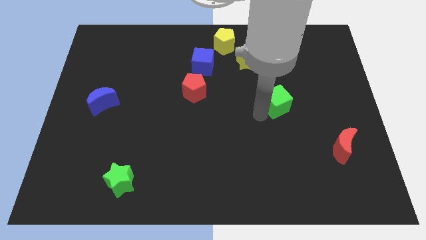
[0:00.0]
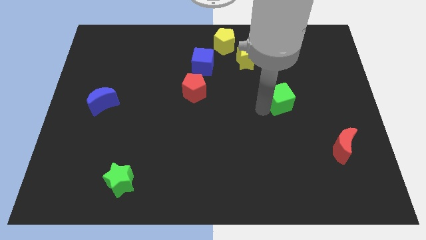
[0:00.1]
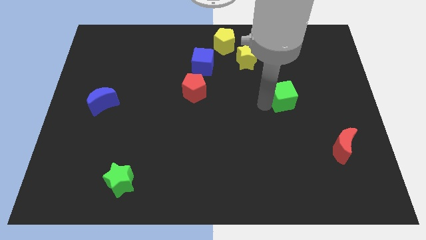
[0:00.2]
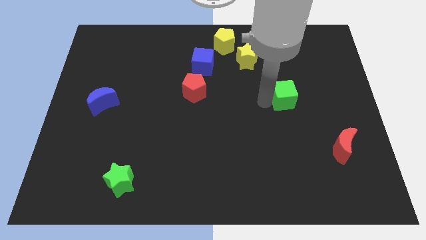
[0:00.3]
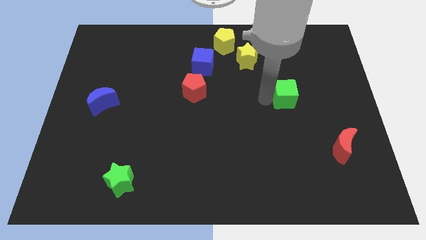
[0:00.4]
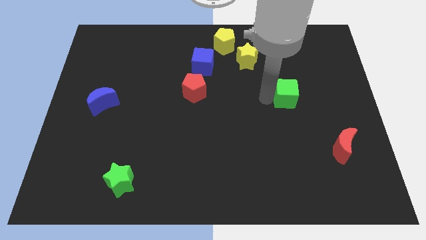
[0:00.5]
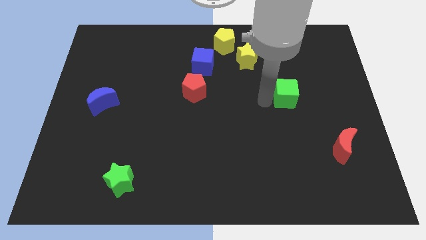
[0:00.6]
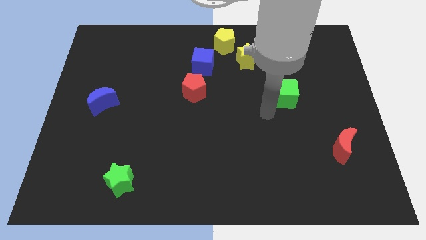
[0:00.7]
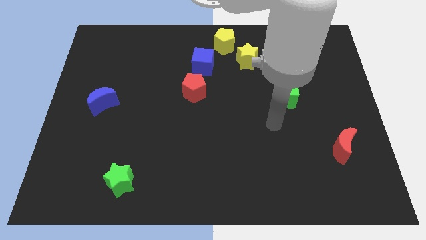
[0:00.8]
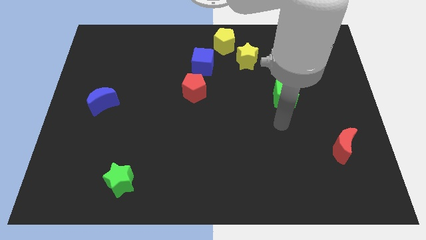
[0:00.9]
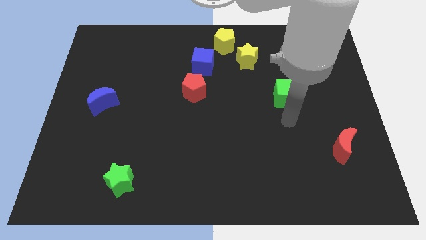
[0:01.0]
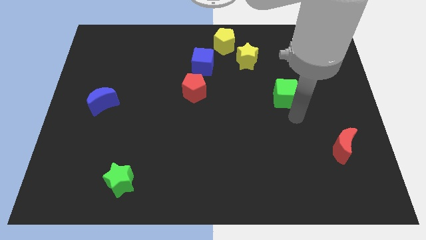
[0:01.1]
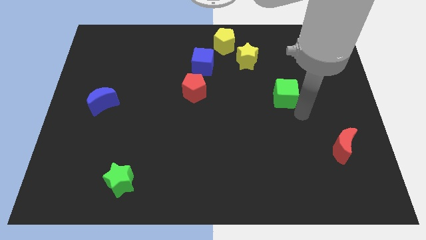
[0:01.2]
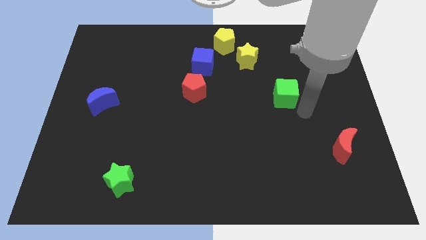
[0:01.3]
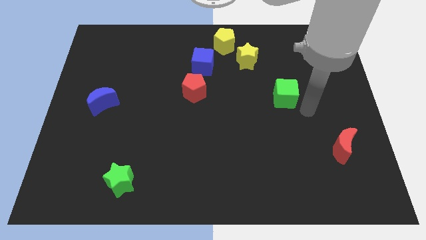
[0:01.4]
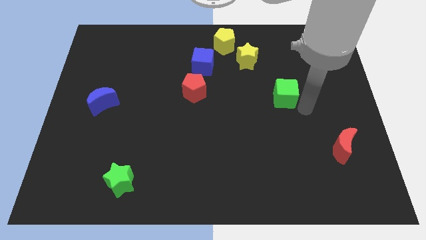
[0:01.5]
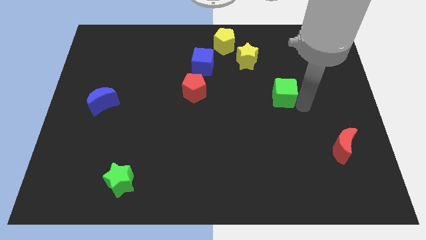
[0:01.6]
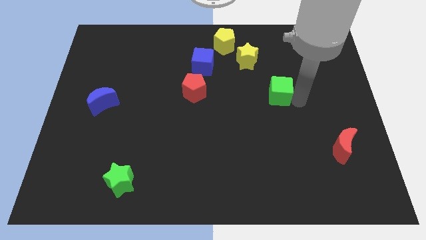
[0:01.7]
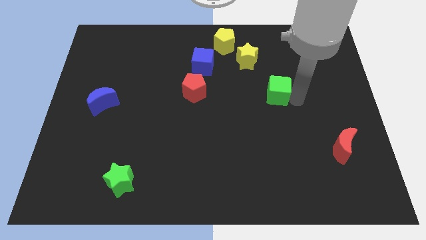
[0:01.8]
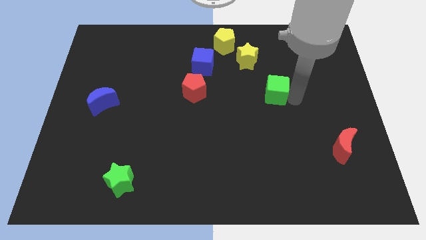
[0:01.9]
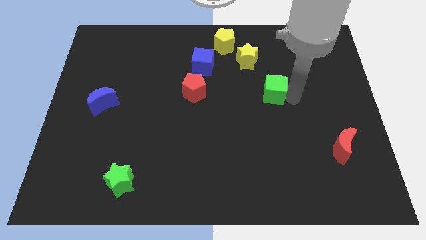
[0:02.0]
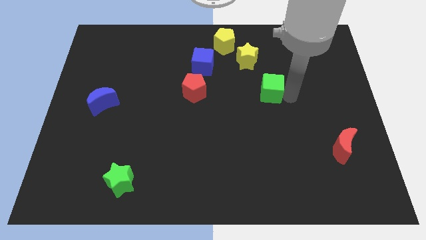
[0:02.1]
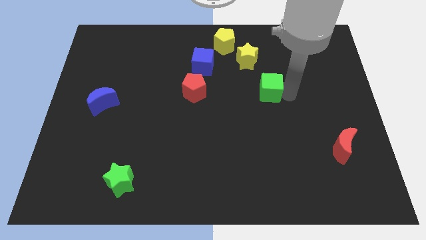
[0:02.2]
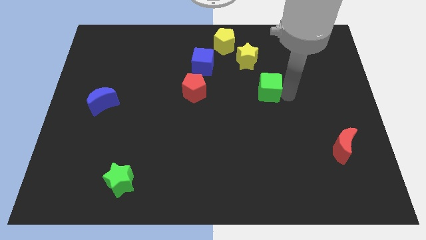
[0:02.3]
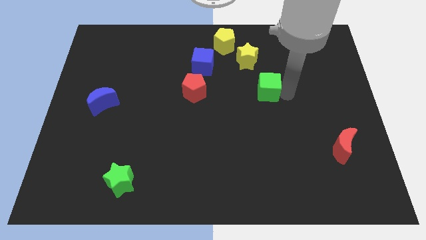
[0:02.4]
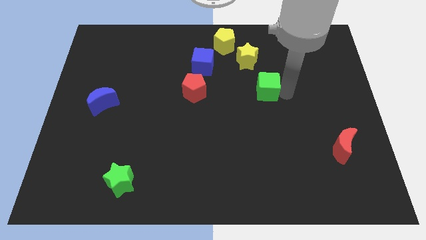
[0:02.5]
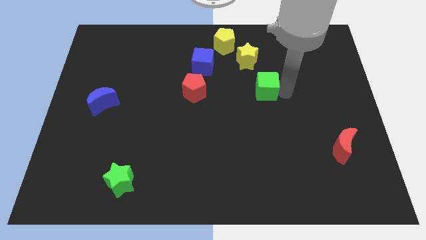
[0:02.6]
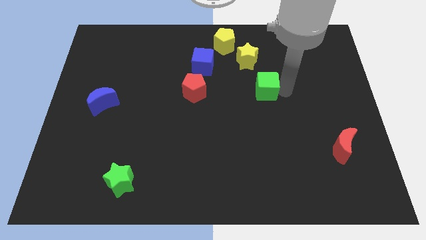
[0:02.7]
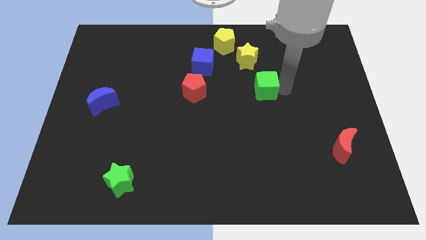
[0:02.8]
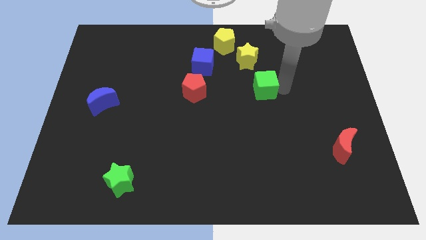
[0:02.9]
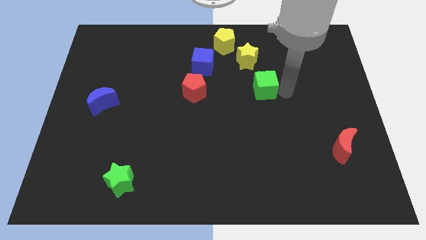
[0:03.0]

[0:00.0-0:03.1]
push green cube towards yellow star

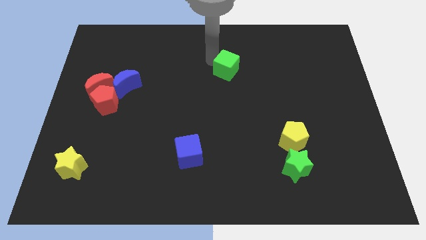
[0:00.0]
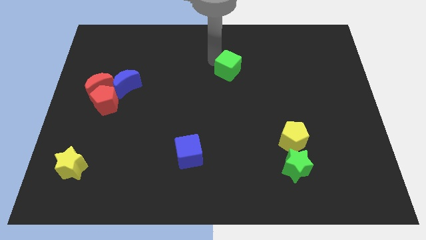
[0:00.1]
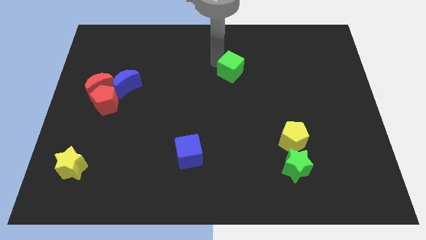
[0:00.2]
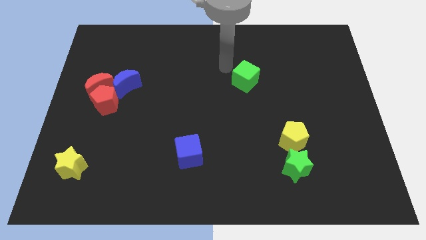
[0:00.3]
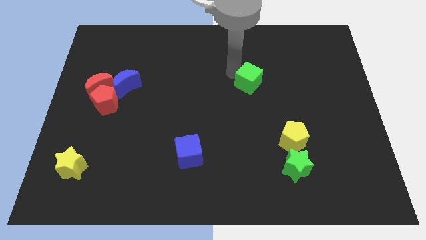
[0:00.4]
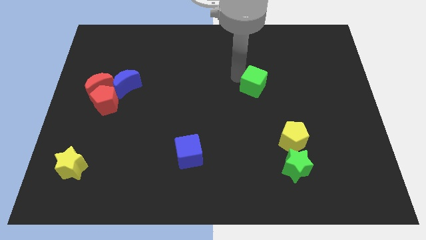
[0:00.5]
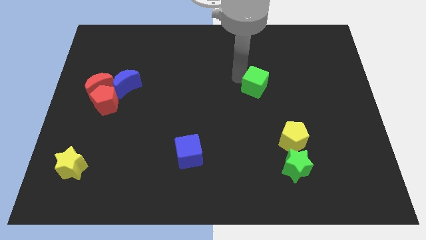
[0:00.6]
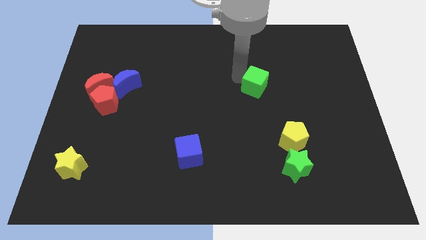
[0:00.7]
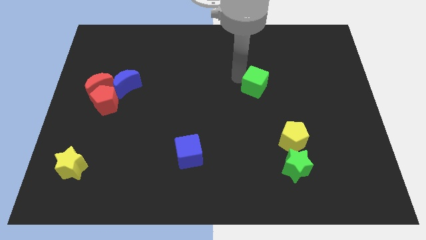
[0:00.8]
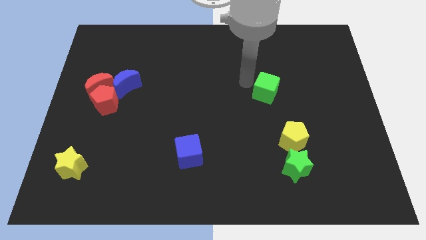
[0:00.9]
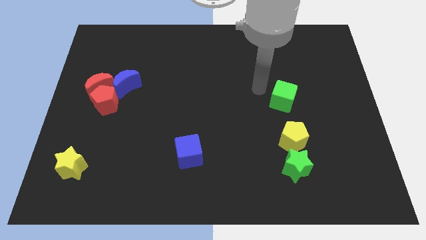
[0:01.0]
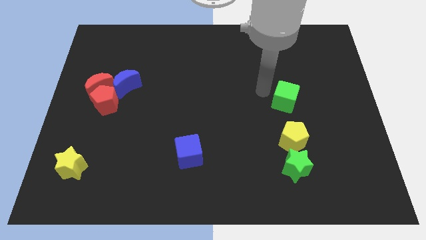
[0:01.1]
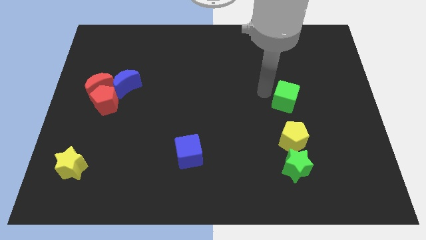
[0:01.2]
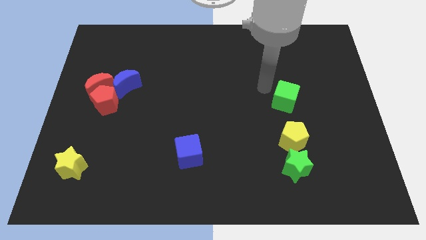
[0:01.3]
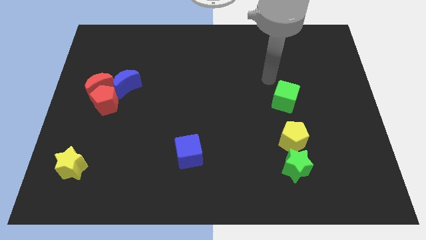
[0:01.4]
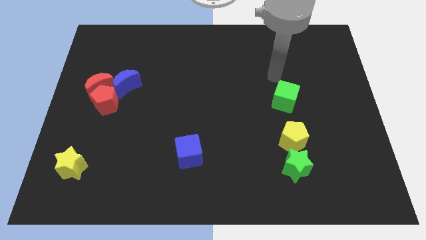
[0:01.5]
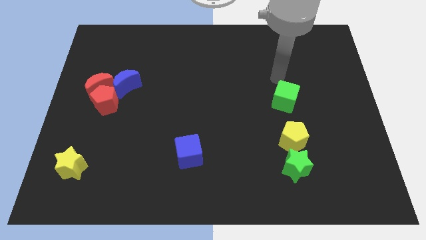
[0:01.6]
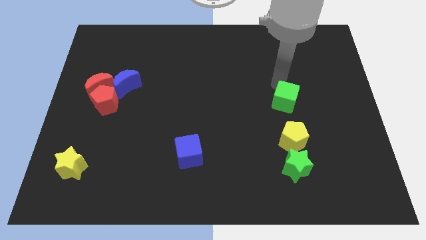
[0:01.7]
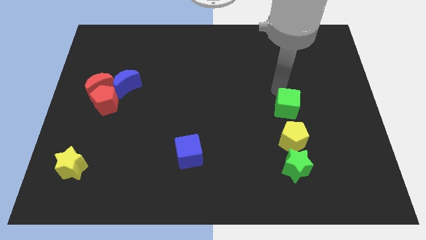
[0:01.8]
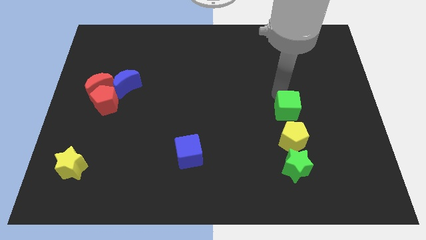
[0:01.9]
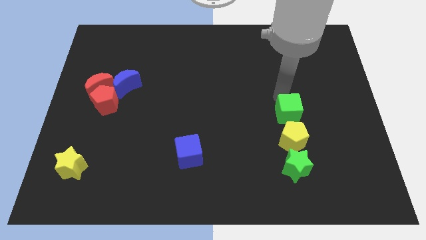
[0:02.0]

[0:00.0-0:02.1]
move the green cube bottom to the yellow pentagon

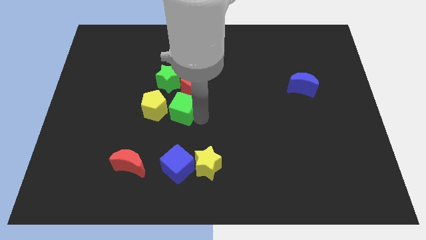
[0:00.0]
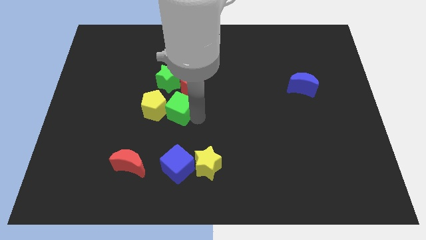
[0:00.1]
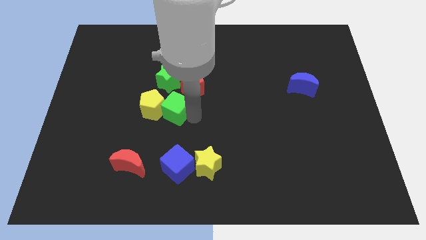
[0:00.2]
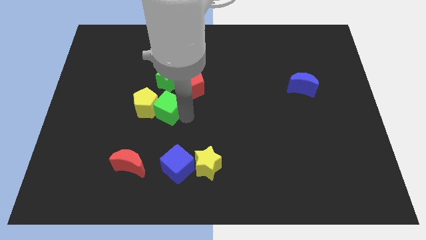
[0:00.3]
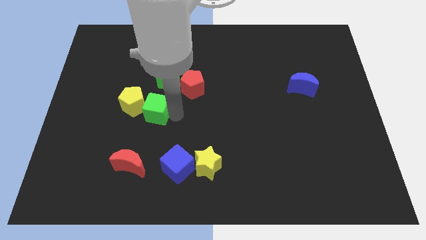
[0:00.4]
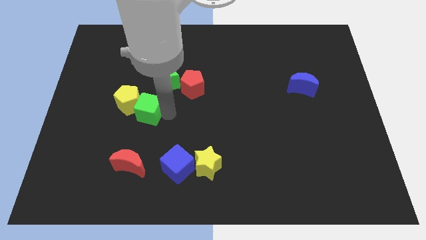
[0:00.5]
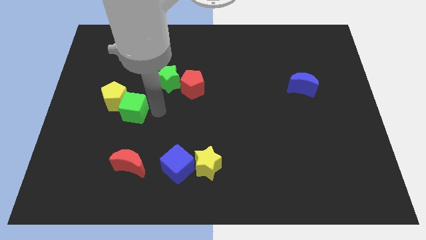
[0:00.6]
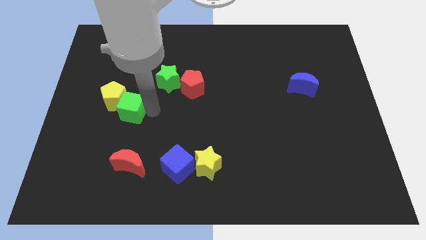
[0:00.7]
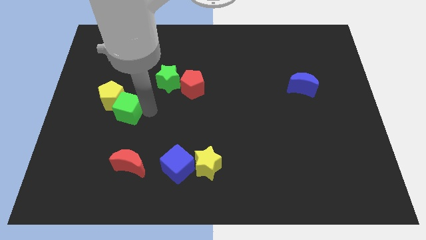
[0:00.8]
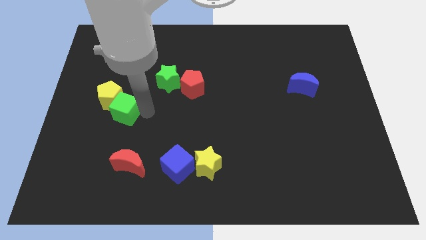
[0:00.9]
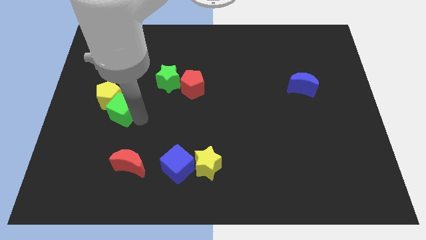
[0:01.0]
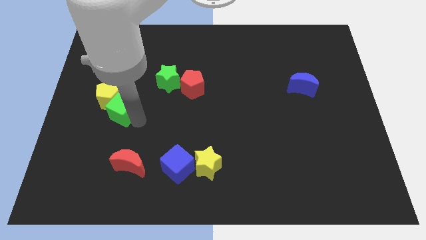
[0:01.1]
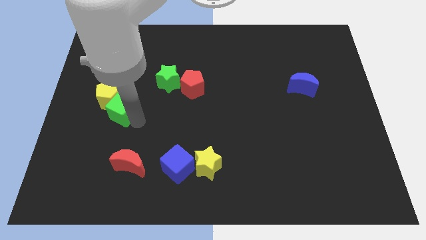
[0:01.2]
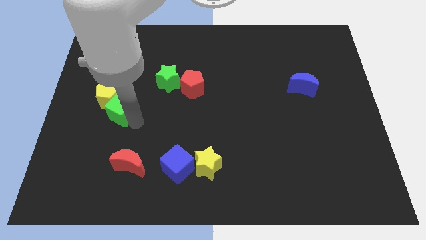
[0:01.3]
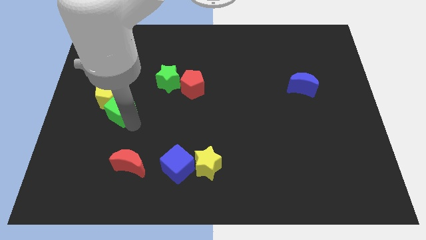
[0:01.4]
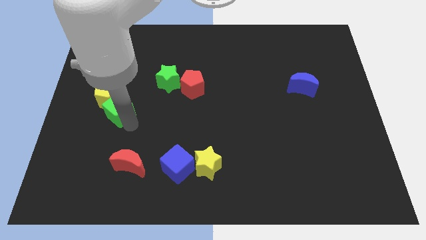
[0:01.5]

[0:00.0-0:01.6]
push the green cube and yellow pentagon together to the left side

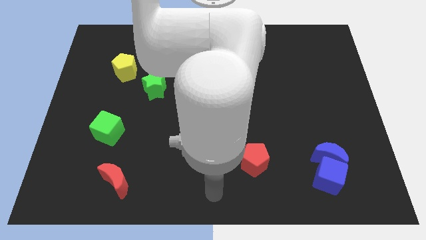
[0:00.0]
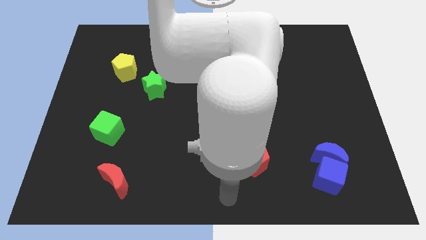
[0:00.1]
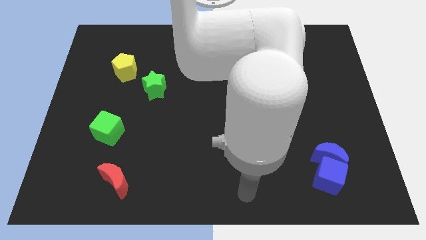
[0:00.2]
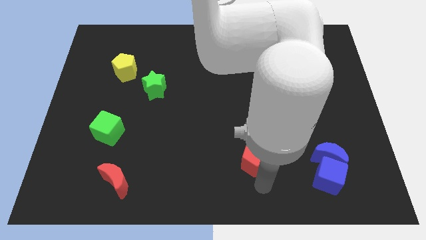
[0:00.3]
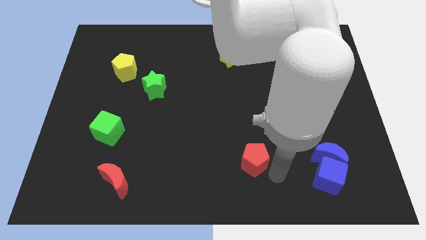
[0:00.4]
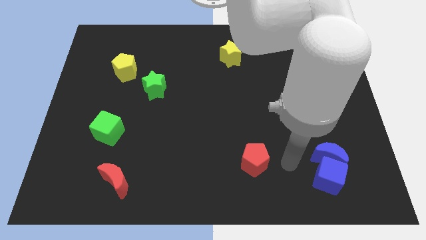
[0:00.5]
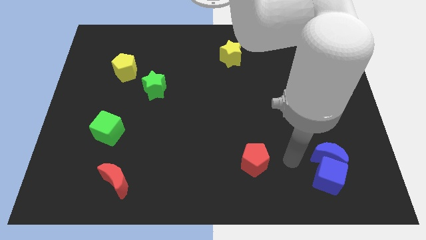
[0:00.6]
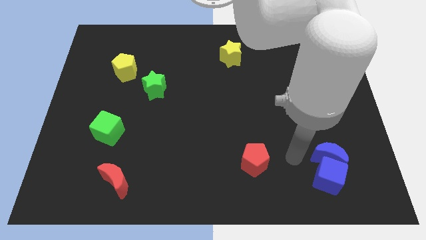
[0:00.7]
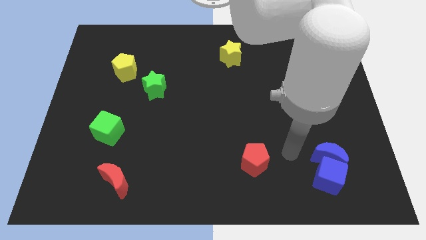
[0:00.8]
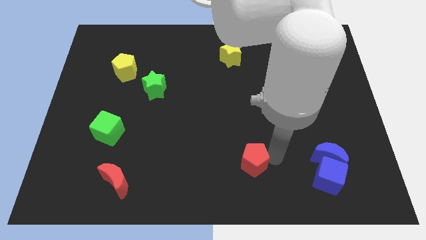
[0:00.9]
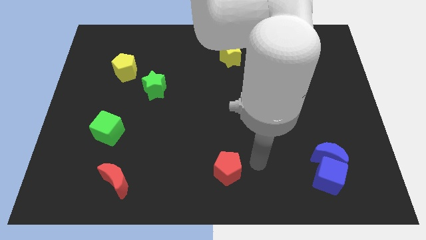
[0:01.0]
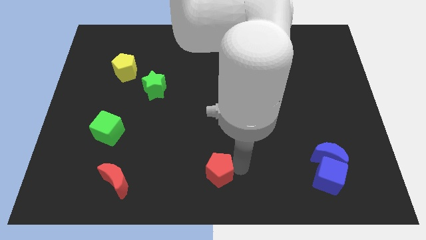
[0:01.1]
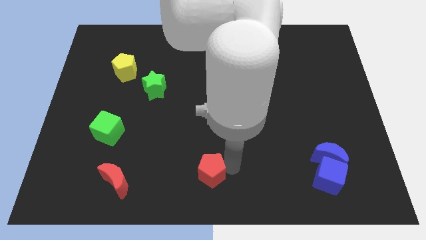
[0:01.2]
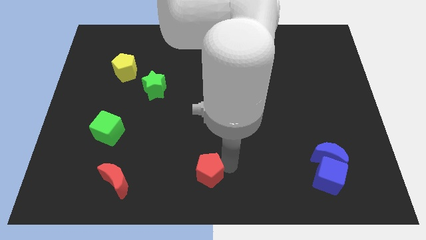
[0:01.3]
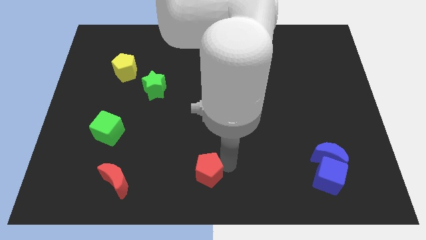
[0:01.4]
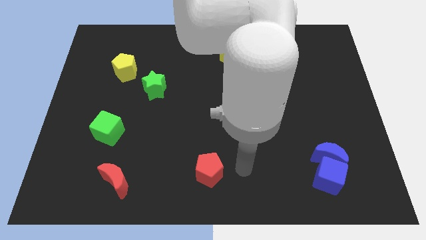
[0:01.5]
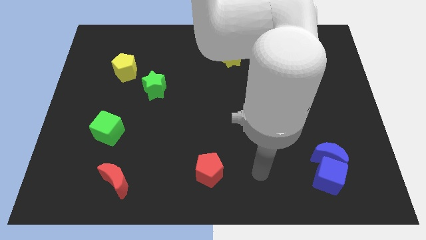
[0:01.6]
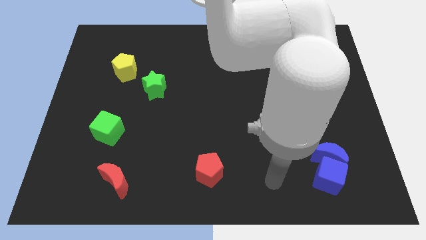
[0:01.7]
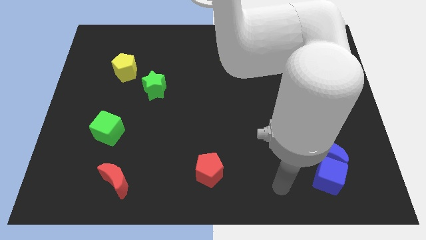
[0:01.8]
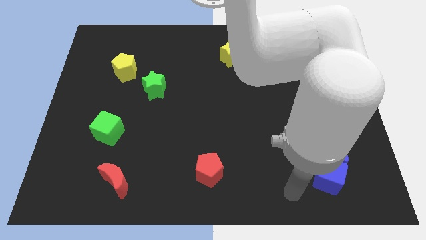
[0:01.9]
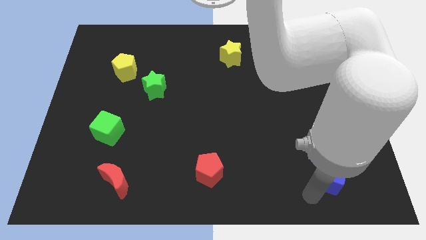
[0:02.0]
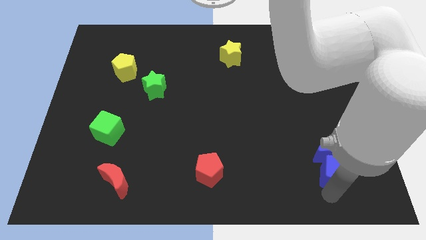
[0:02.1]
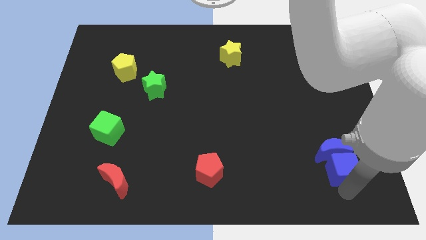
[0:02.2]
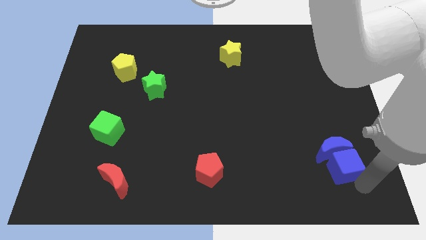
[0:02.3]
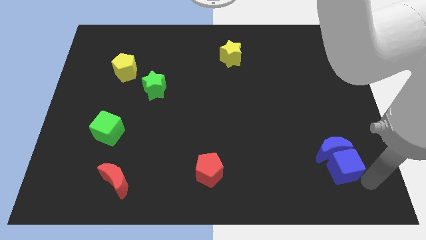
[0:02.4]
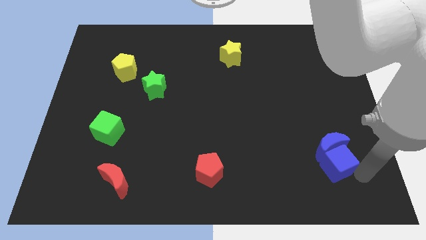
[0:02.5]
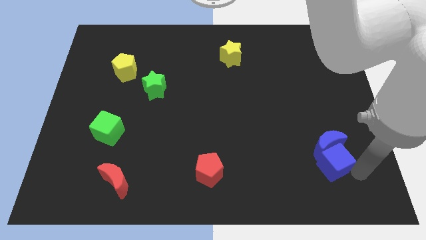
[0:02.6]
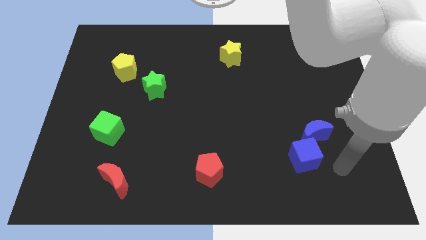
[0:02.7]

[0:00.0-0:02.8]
move the red pentagon between the red moon and blue cube
